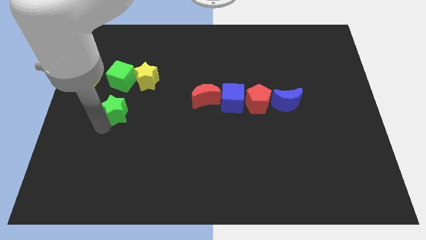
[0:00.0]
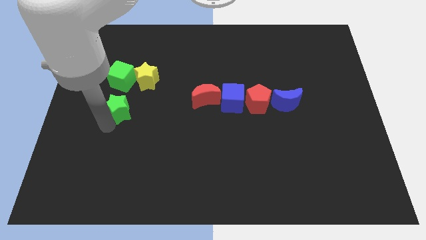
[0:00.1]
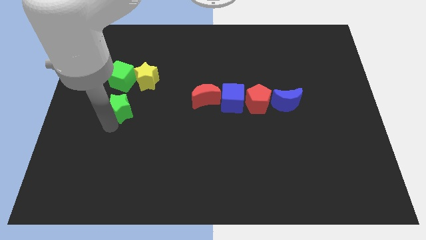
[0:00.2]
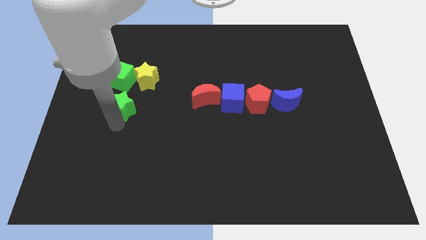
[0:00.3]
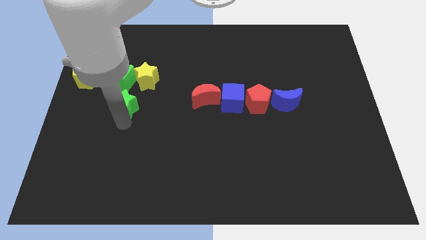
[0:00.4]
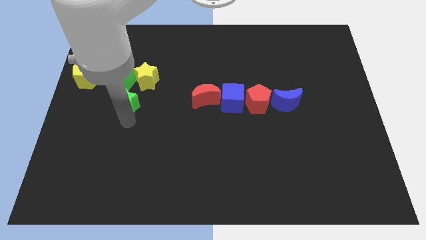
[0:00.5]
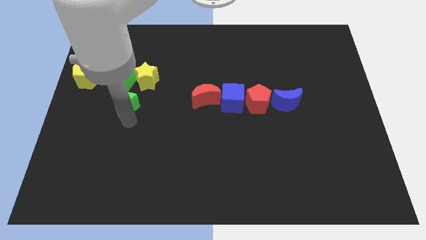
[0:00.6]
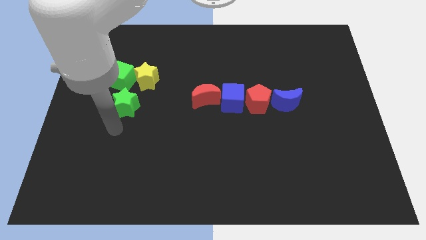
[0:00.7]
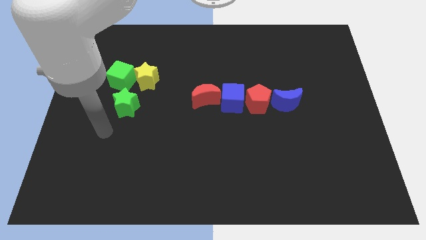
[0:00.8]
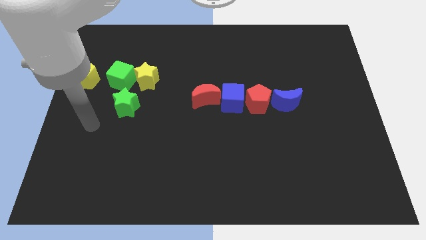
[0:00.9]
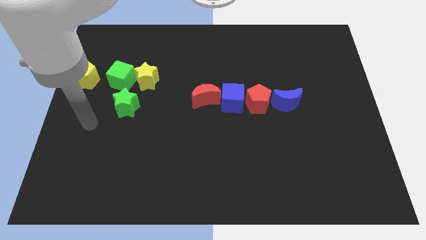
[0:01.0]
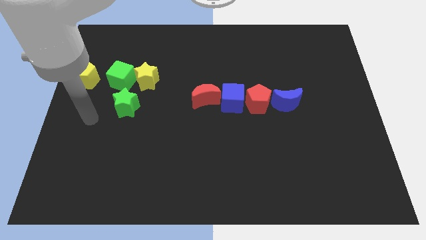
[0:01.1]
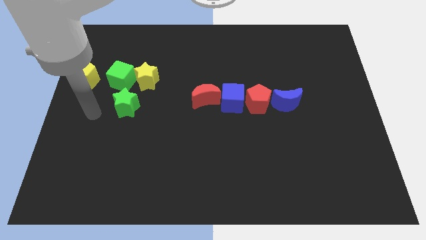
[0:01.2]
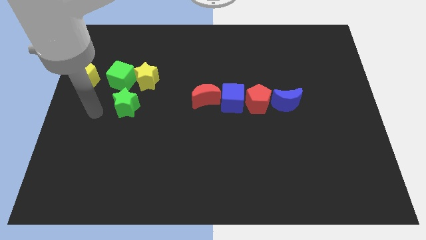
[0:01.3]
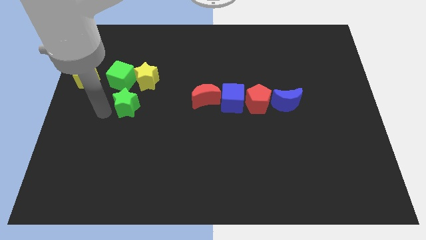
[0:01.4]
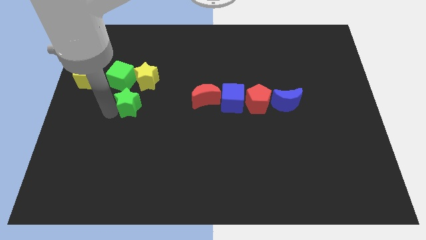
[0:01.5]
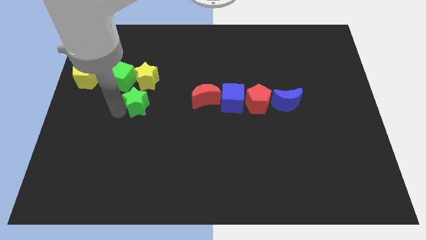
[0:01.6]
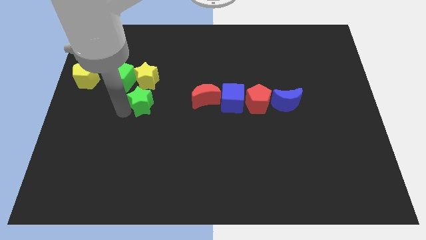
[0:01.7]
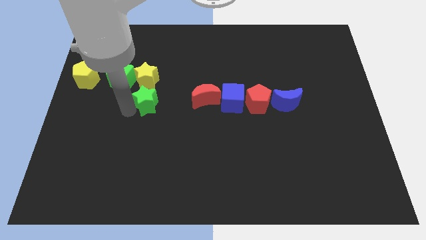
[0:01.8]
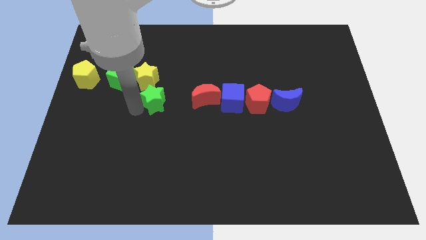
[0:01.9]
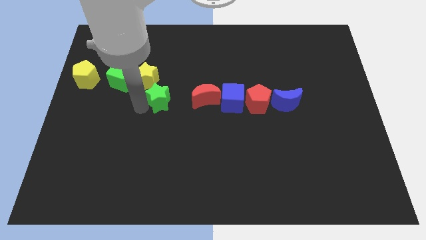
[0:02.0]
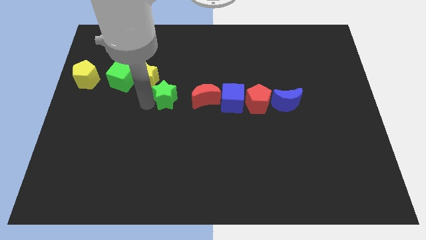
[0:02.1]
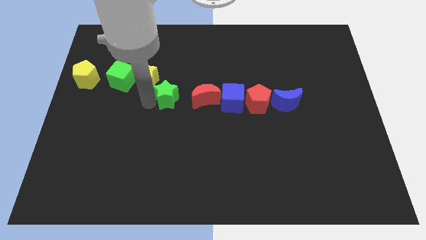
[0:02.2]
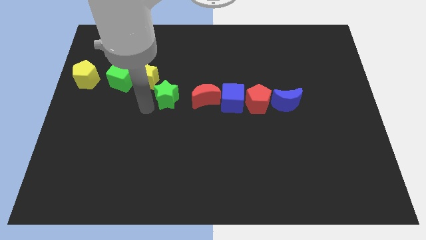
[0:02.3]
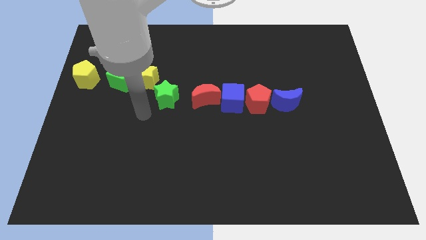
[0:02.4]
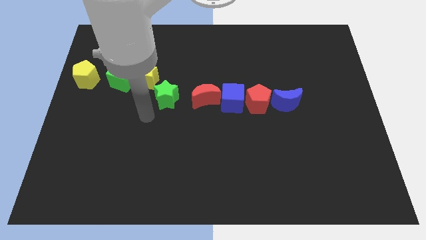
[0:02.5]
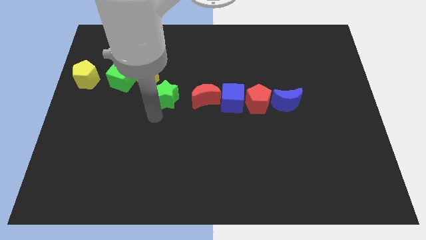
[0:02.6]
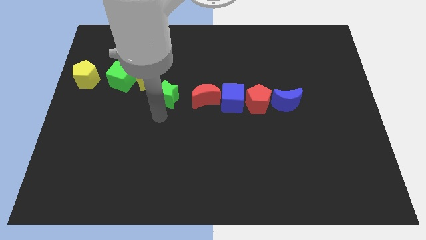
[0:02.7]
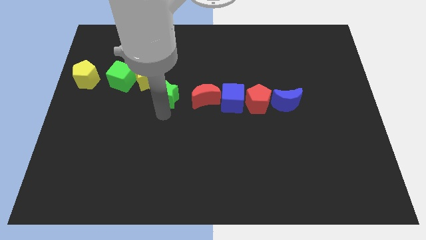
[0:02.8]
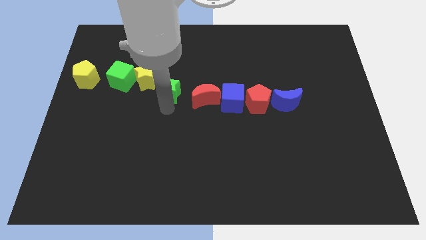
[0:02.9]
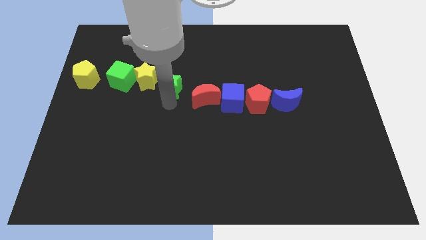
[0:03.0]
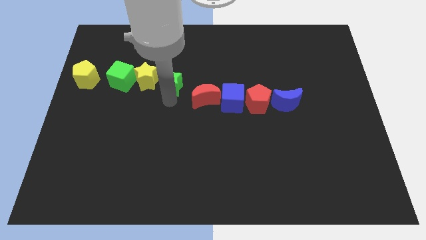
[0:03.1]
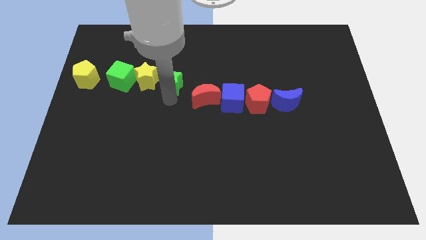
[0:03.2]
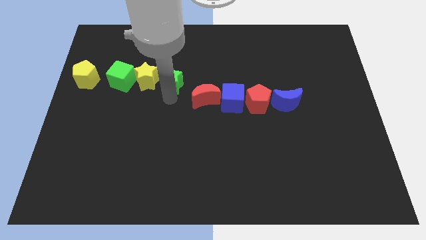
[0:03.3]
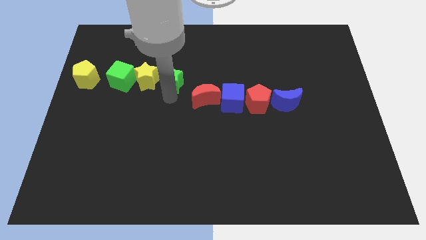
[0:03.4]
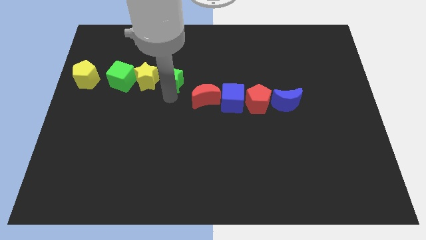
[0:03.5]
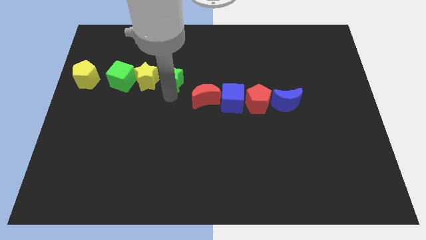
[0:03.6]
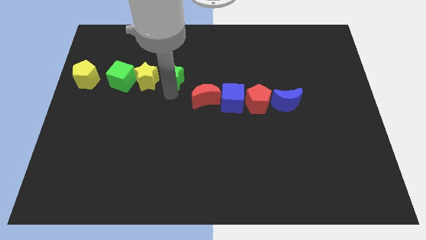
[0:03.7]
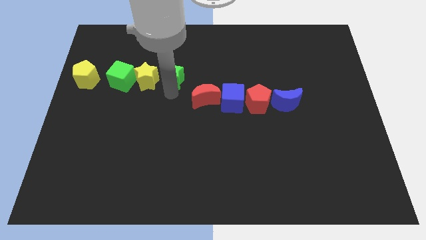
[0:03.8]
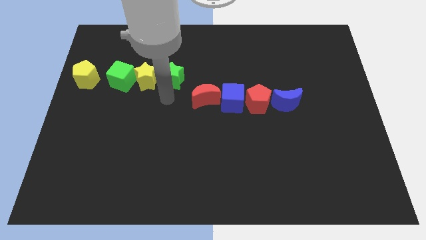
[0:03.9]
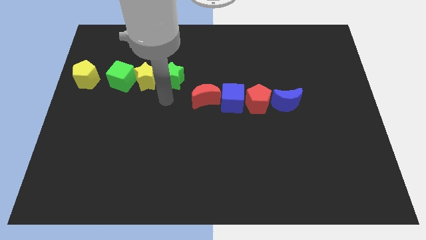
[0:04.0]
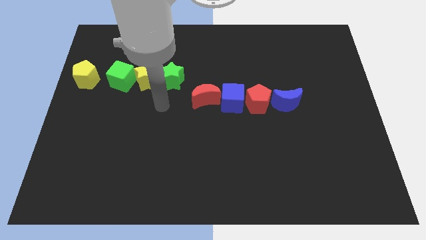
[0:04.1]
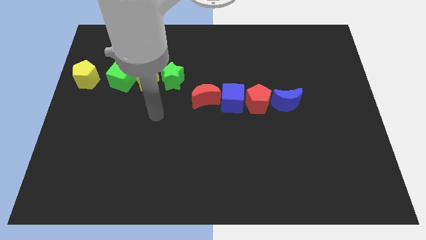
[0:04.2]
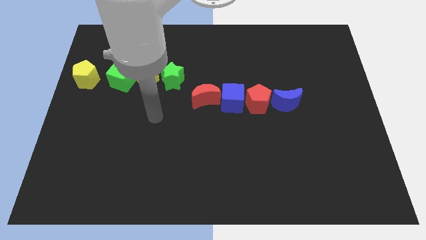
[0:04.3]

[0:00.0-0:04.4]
place green star to the right of yellow star

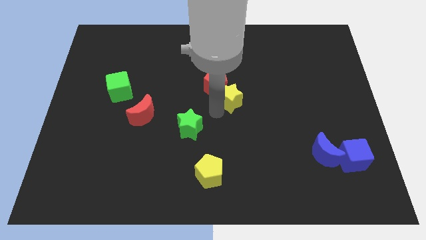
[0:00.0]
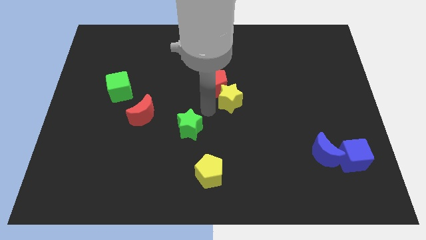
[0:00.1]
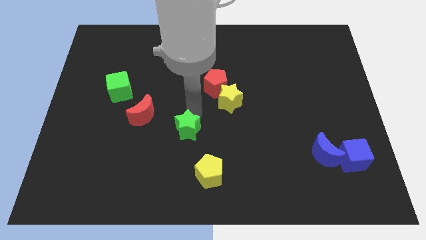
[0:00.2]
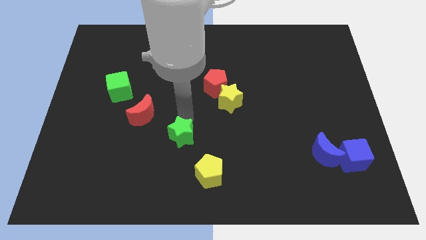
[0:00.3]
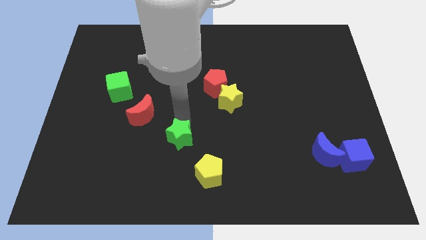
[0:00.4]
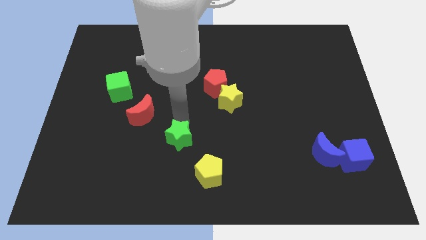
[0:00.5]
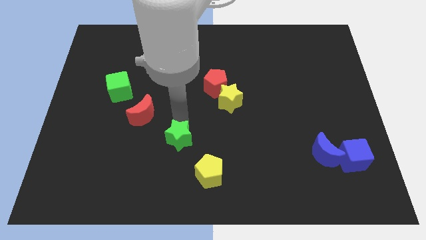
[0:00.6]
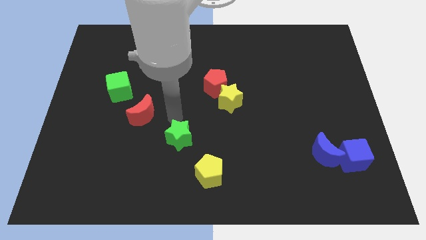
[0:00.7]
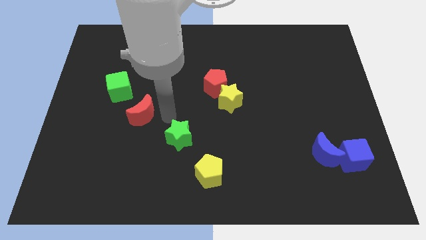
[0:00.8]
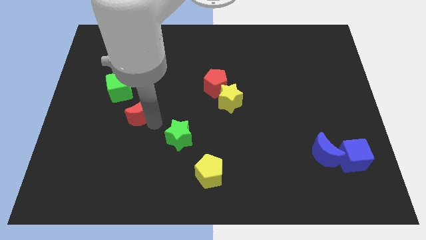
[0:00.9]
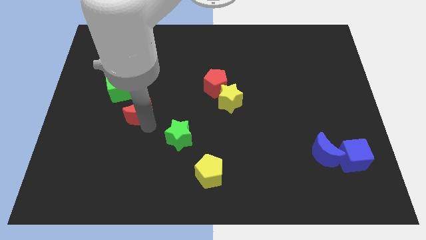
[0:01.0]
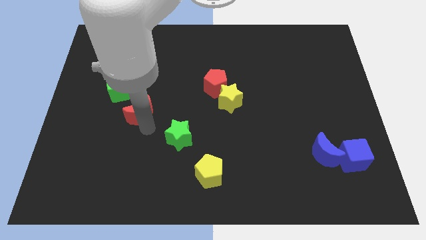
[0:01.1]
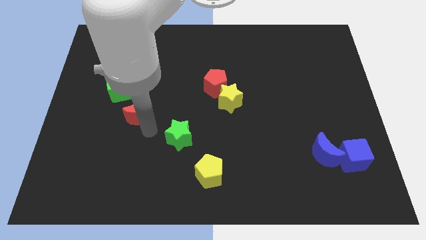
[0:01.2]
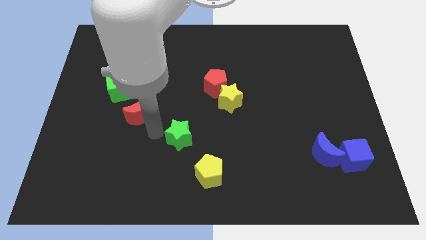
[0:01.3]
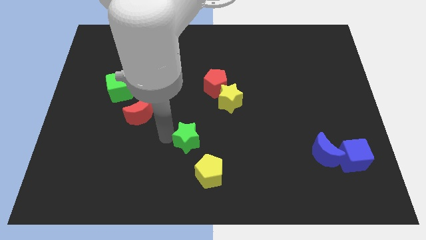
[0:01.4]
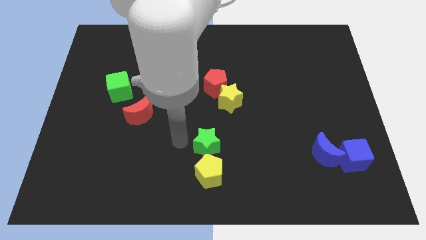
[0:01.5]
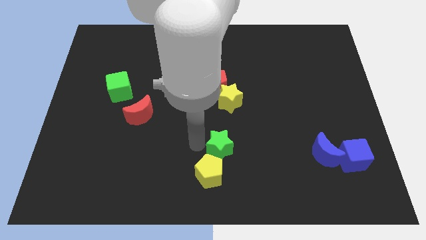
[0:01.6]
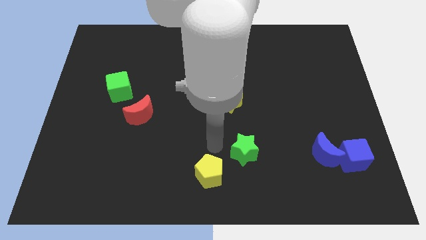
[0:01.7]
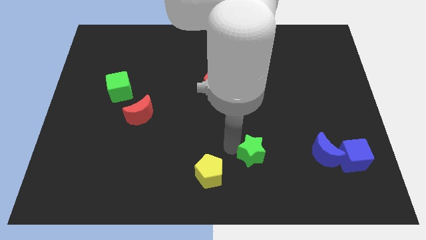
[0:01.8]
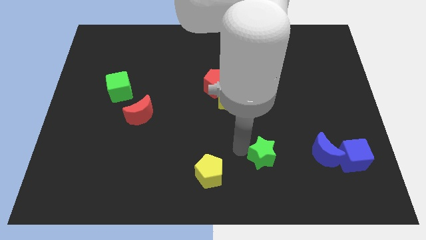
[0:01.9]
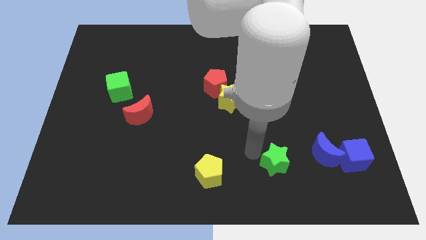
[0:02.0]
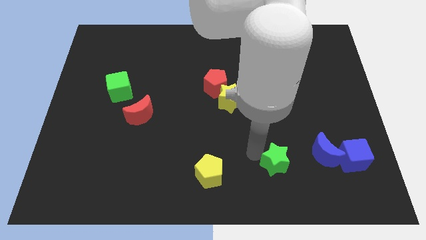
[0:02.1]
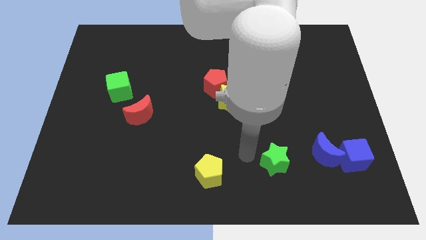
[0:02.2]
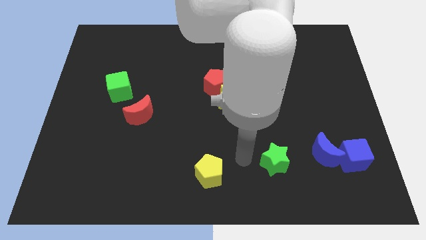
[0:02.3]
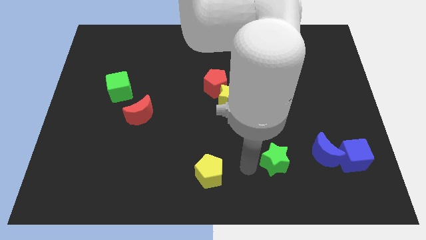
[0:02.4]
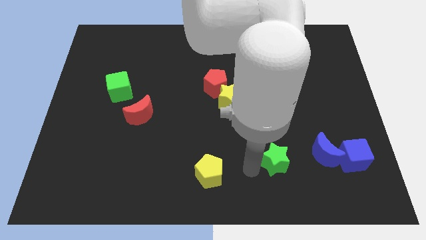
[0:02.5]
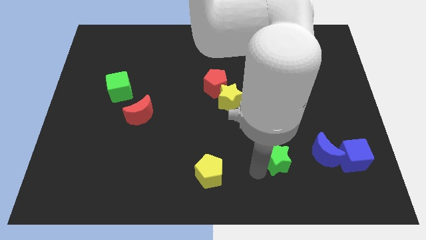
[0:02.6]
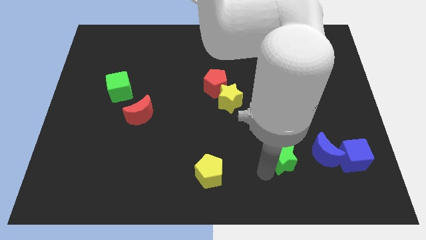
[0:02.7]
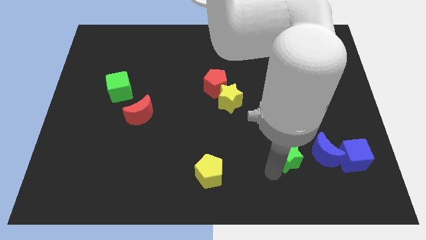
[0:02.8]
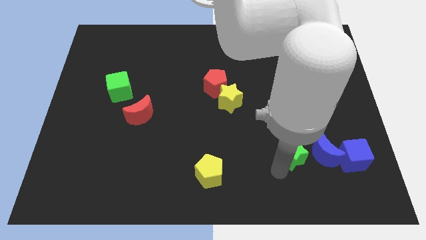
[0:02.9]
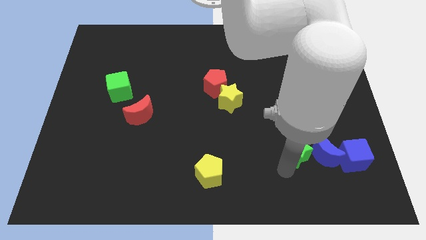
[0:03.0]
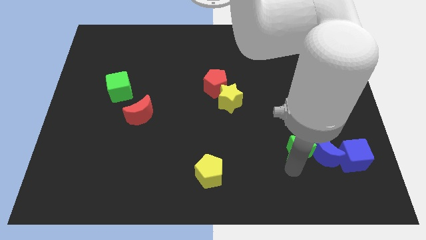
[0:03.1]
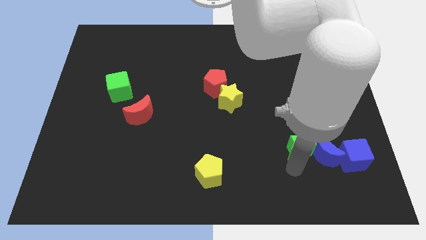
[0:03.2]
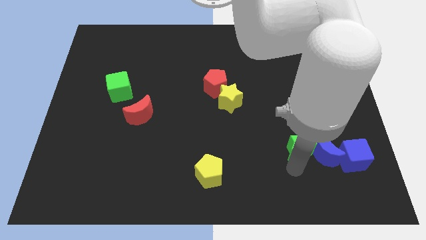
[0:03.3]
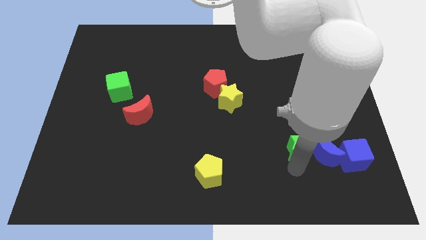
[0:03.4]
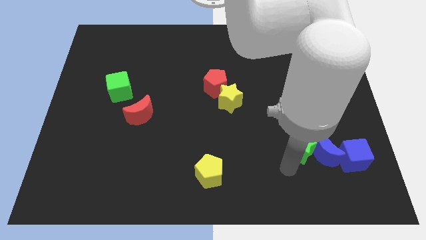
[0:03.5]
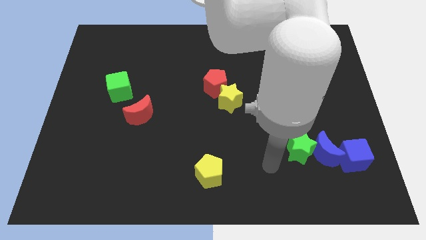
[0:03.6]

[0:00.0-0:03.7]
push the green star into the blue moon

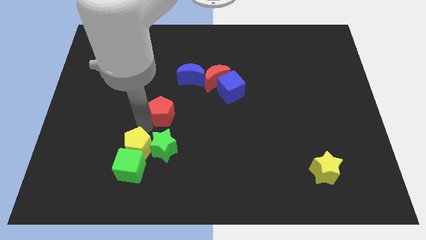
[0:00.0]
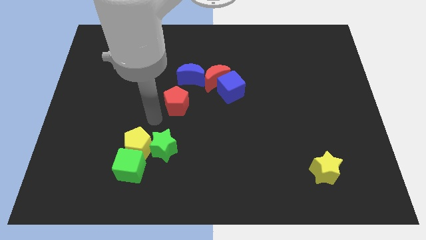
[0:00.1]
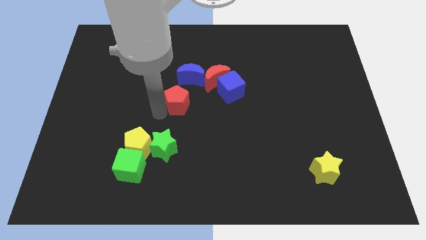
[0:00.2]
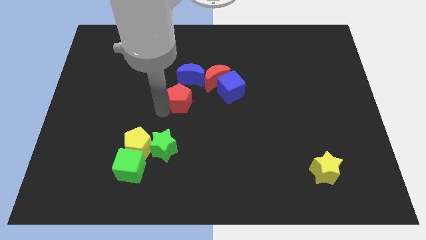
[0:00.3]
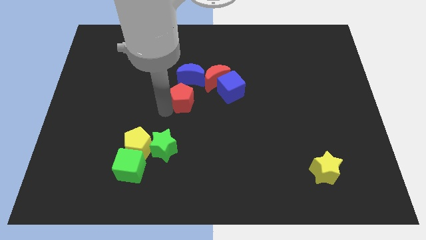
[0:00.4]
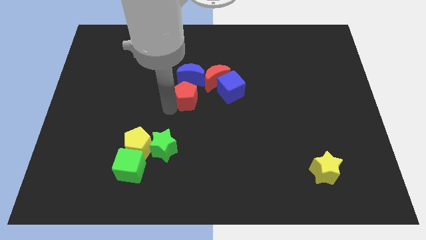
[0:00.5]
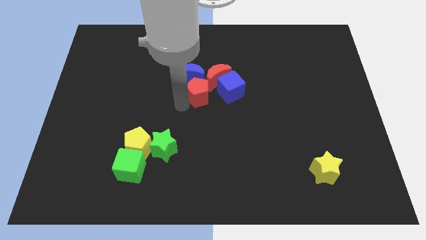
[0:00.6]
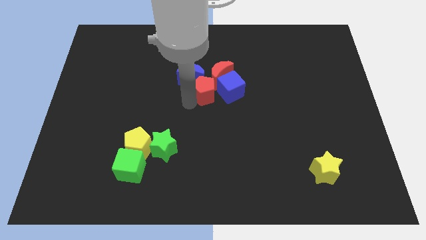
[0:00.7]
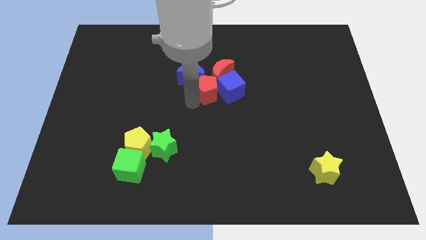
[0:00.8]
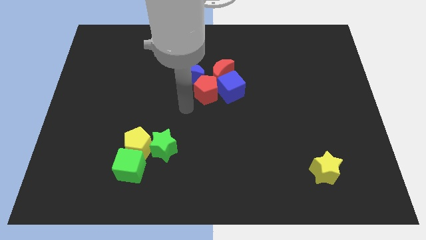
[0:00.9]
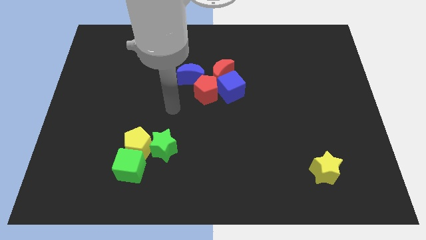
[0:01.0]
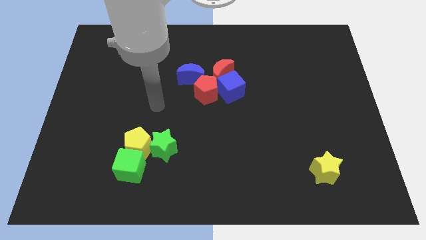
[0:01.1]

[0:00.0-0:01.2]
push the red pentagon into the red crescent
